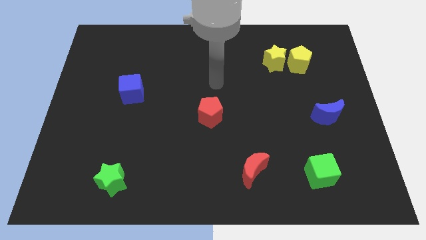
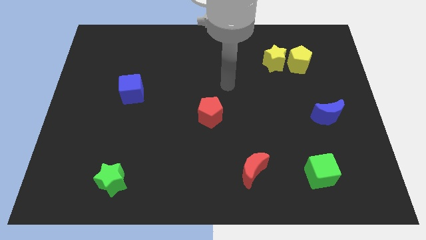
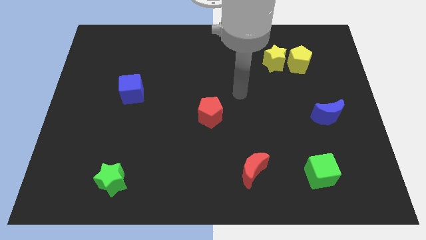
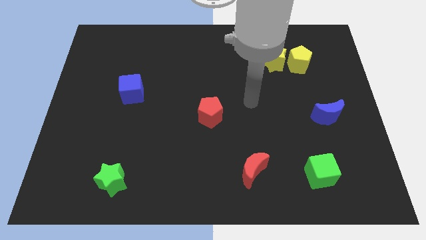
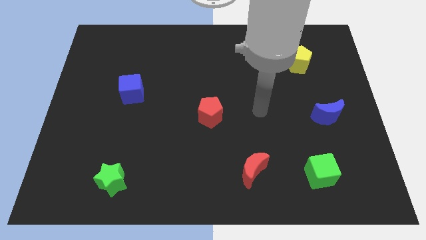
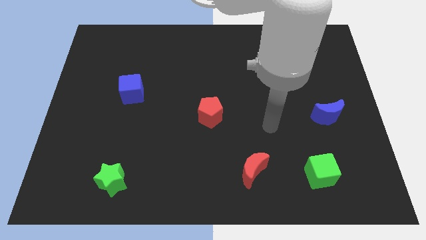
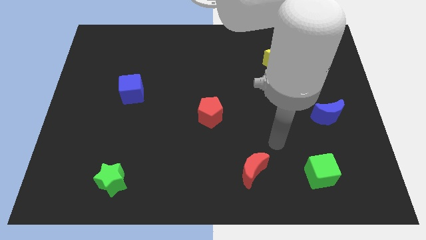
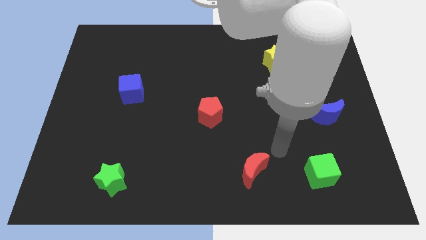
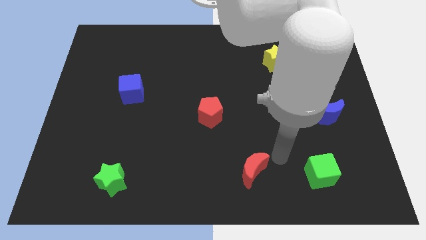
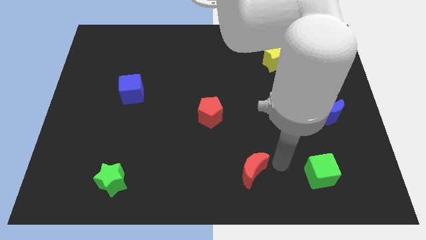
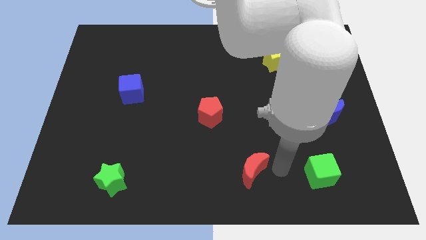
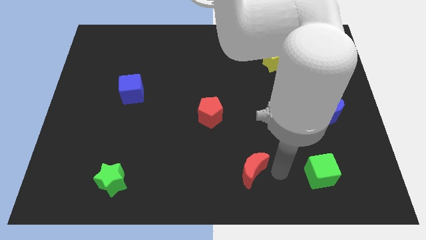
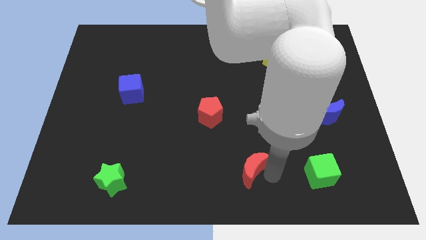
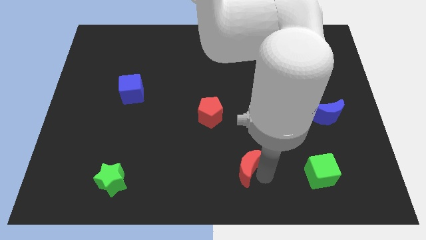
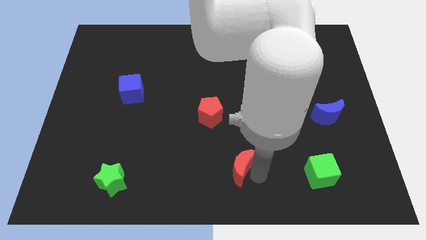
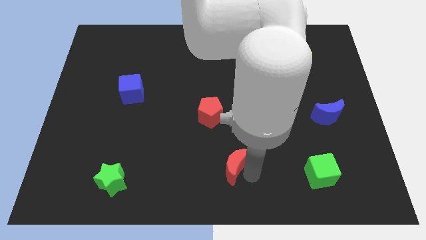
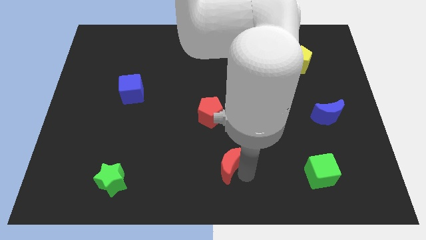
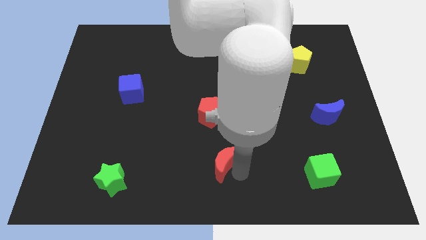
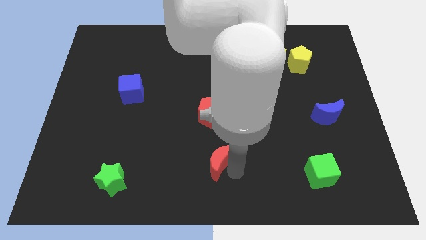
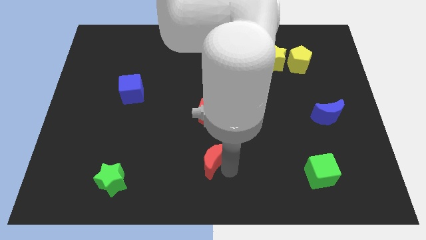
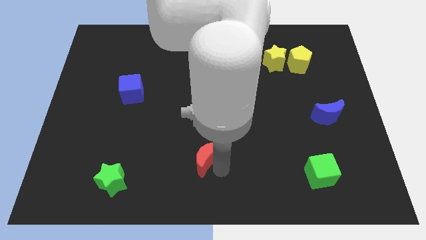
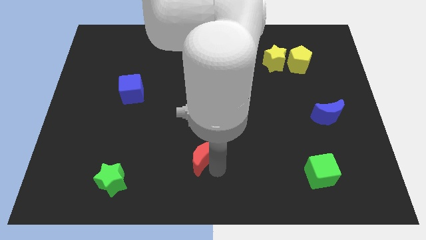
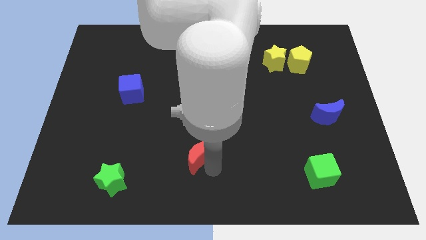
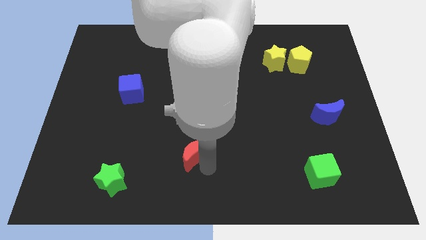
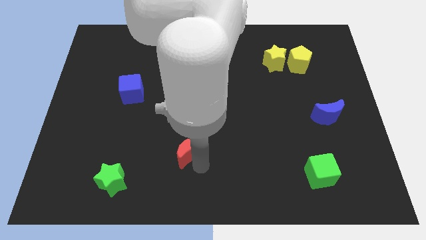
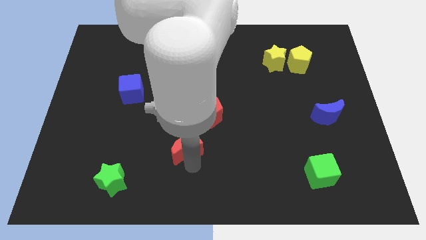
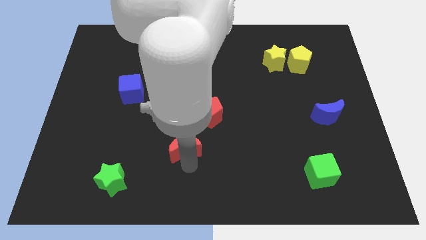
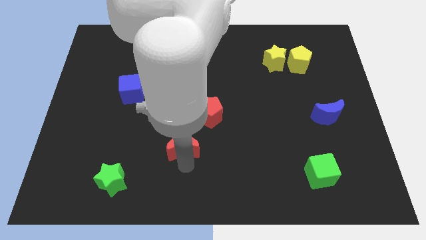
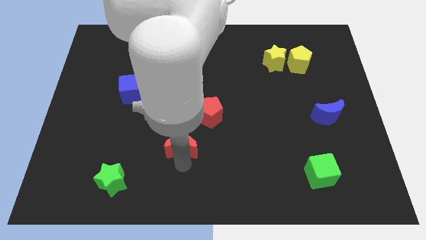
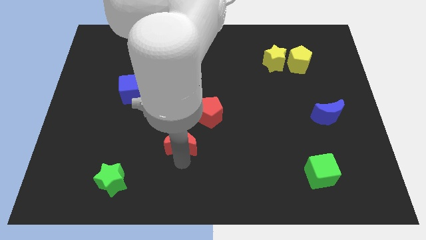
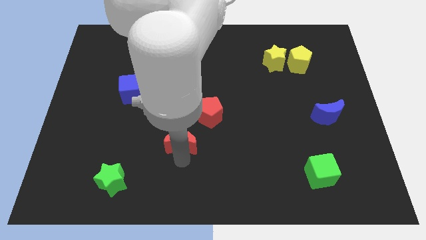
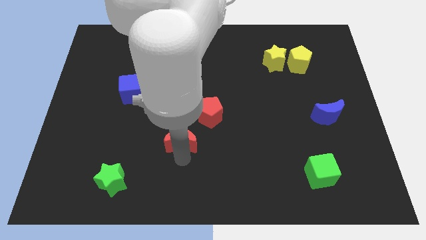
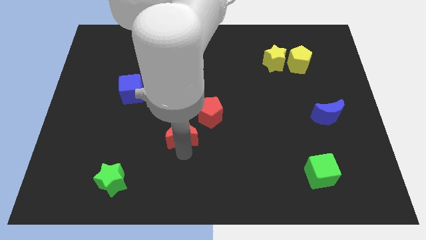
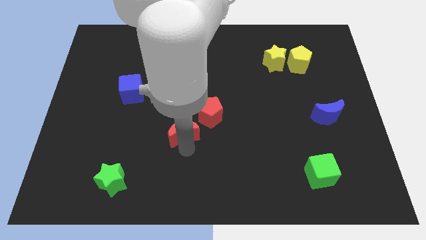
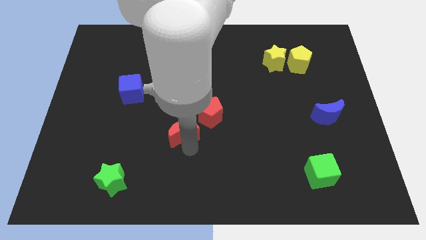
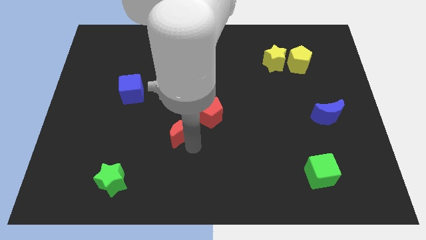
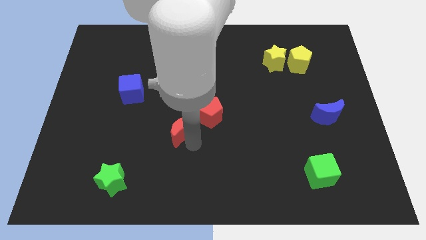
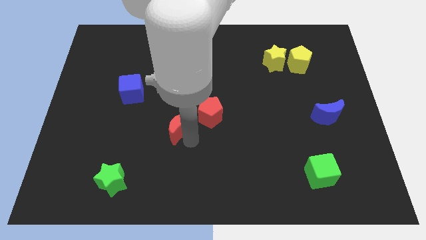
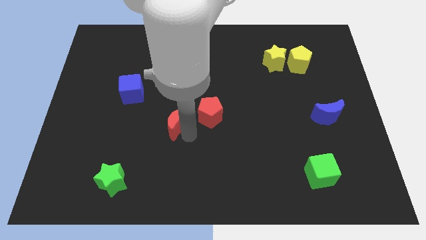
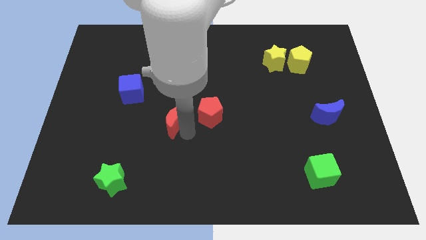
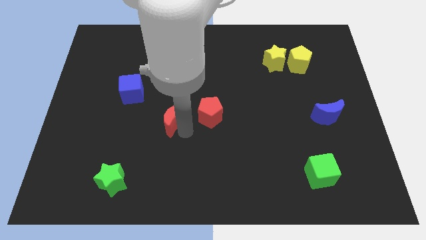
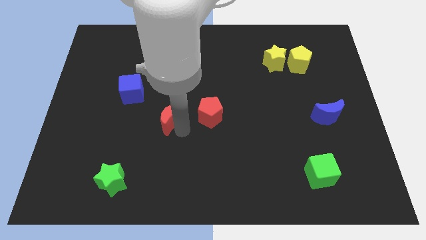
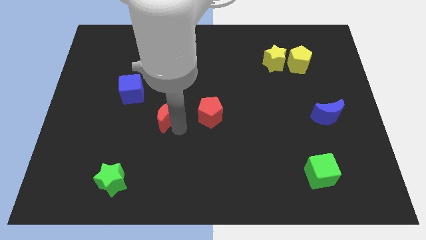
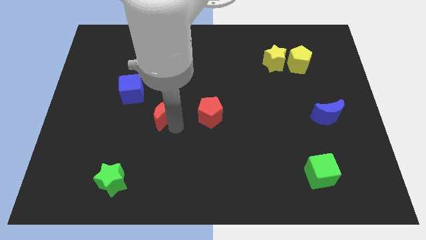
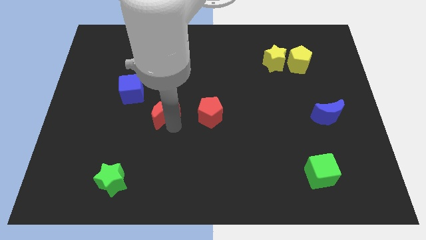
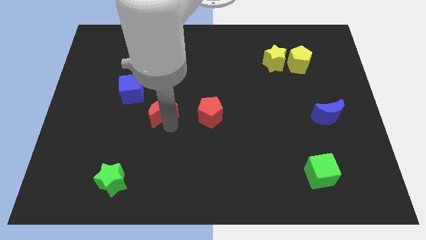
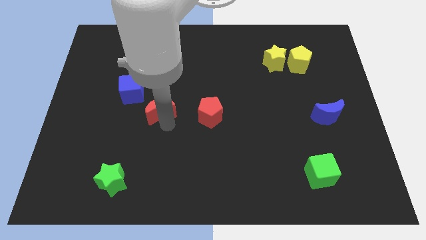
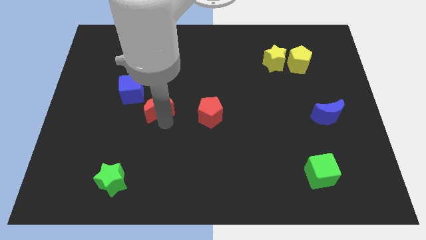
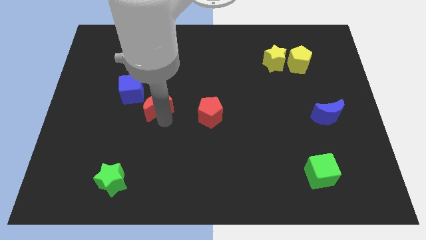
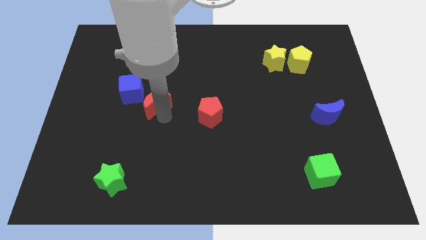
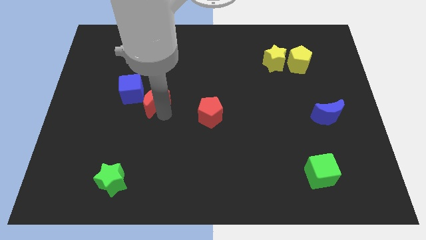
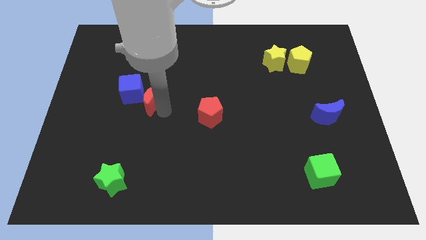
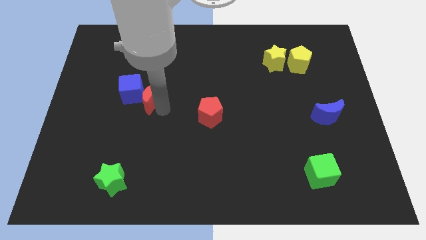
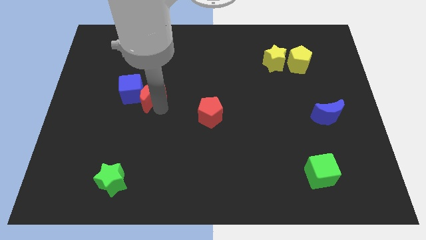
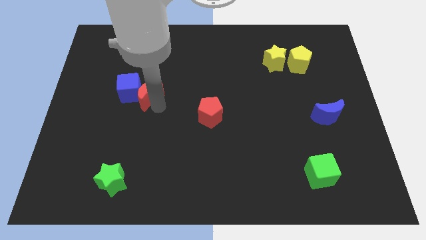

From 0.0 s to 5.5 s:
push the red moon to the blue cube

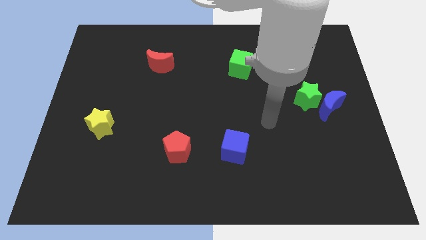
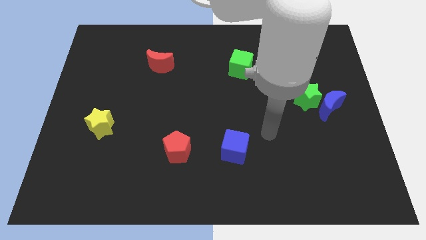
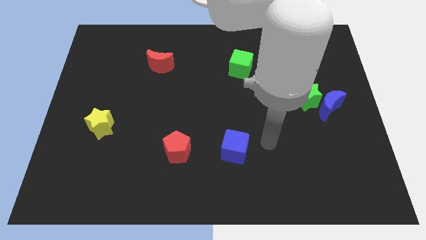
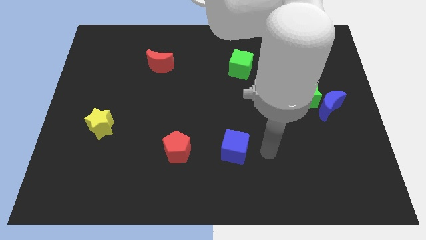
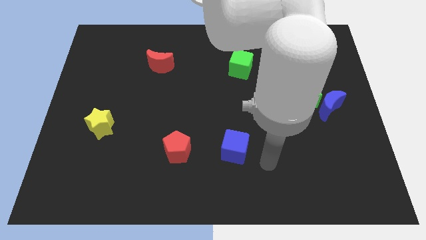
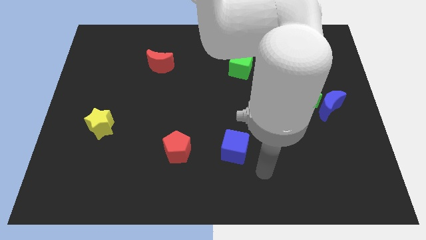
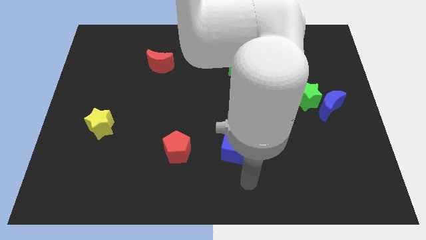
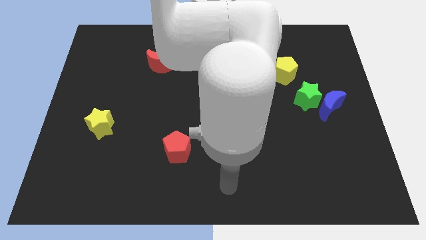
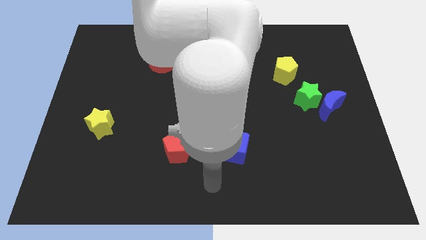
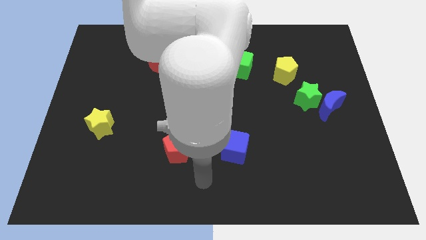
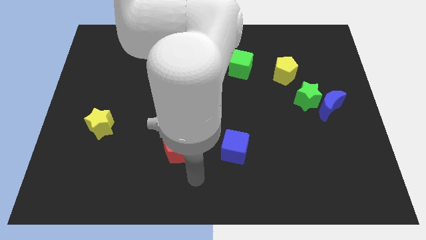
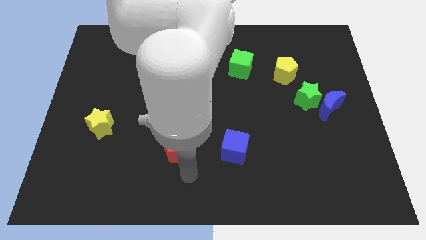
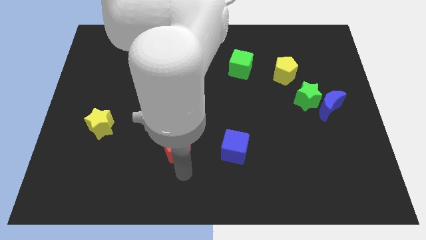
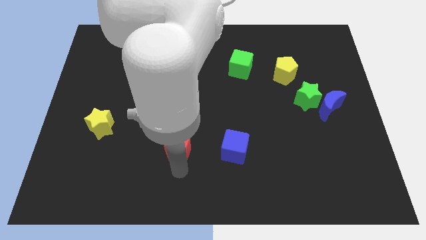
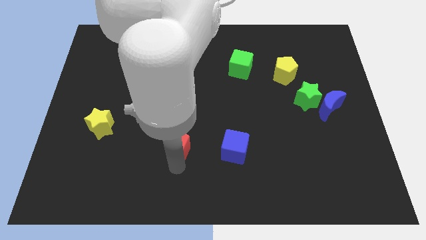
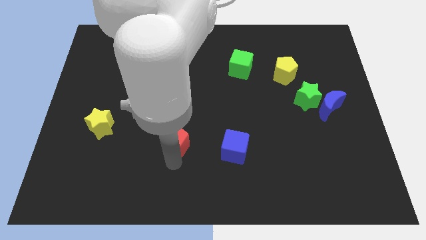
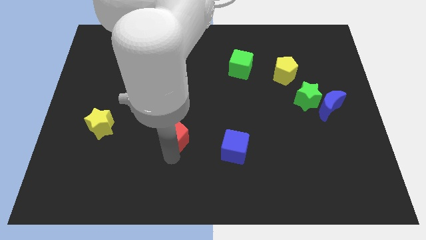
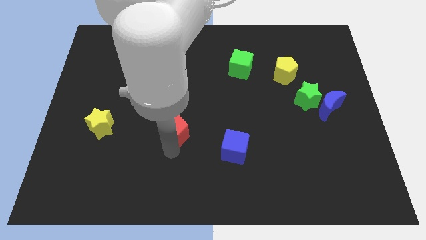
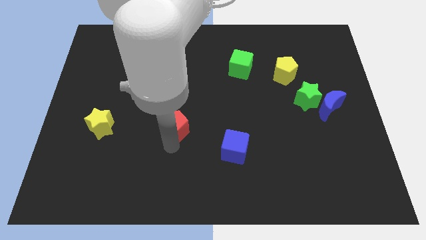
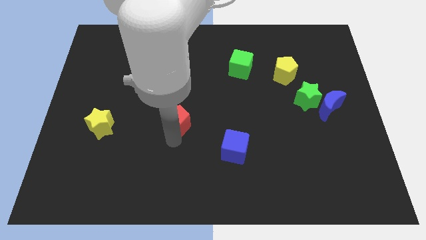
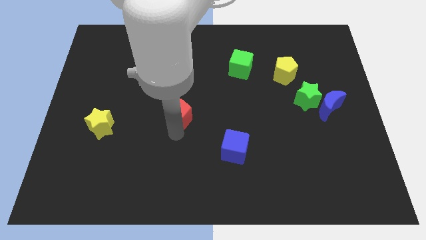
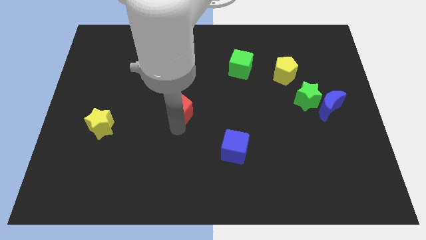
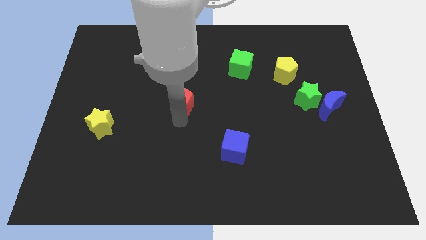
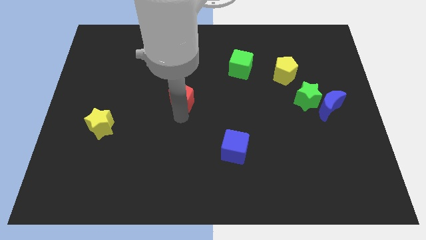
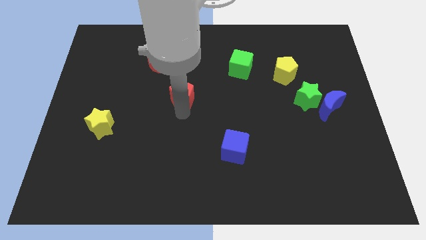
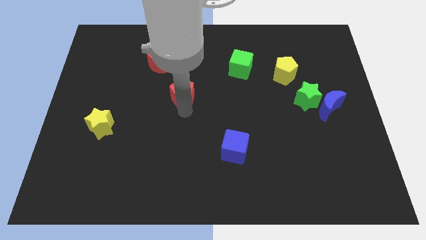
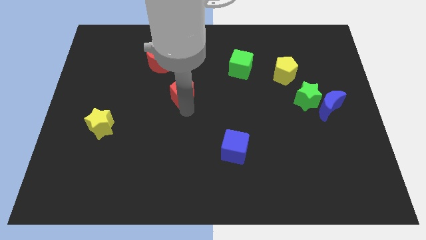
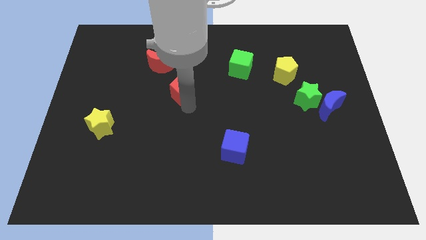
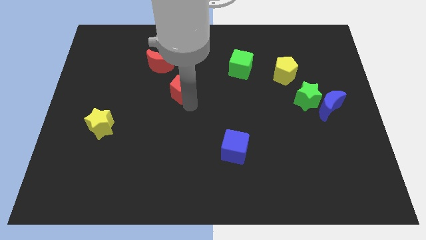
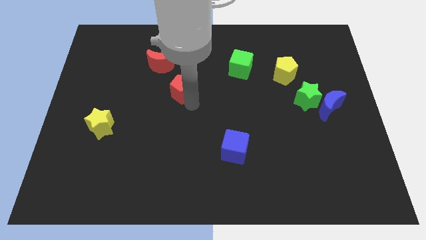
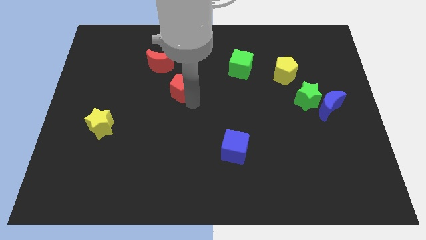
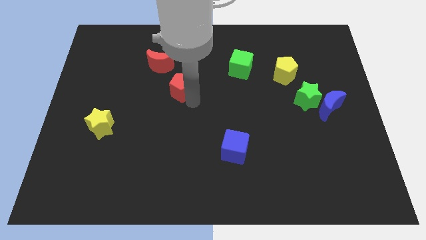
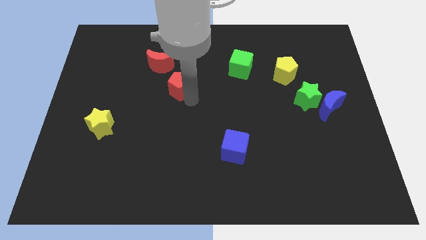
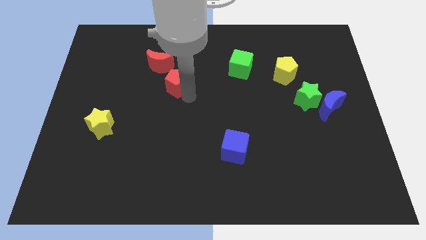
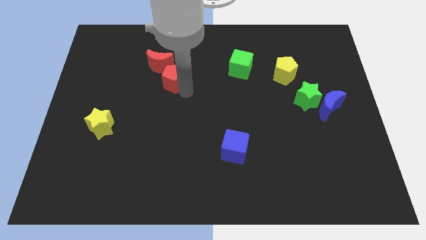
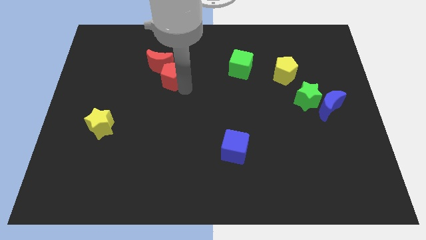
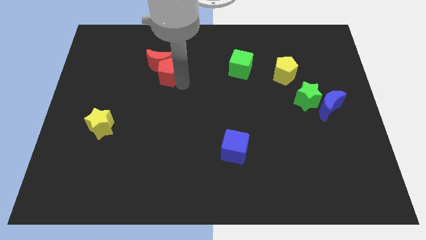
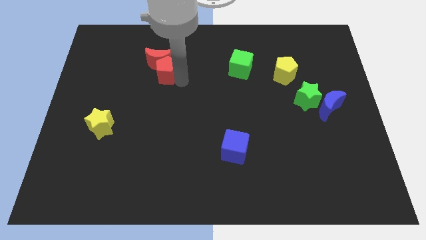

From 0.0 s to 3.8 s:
slide the red pentagon towards the red moon
